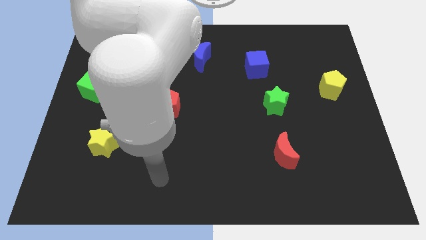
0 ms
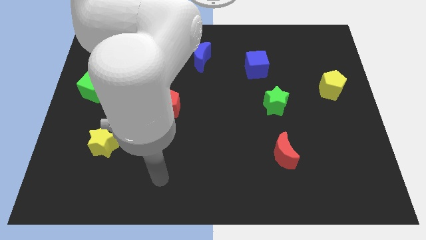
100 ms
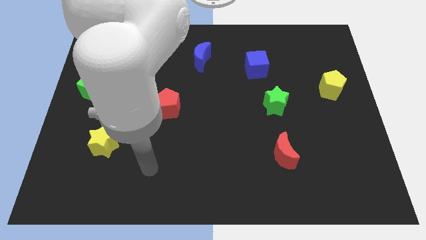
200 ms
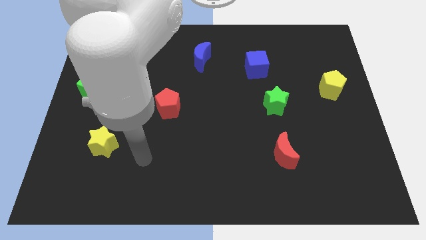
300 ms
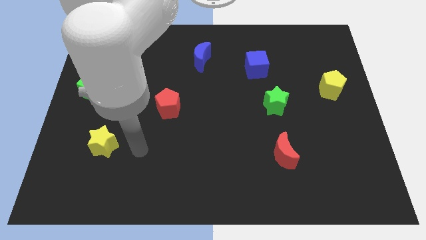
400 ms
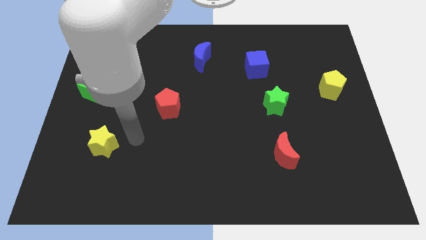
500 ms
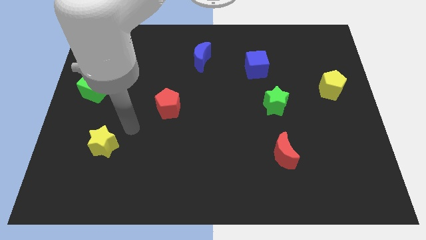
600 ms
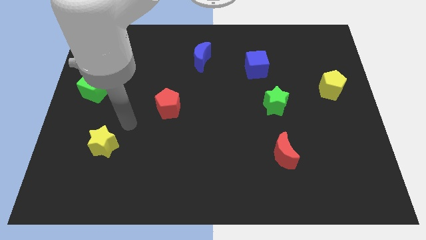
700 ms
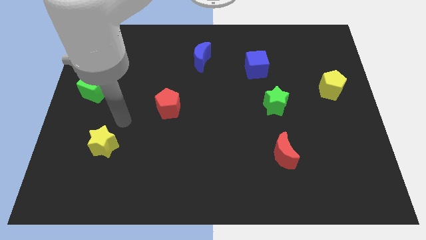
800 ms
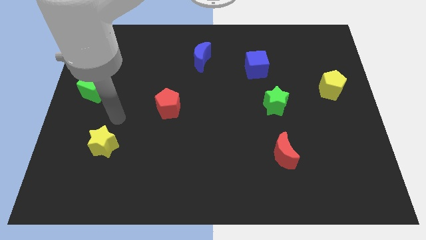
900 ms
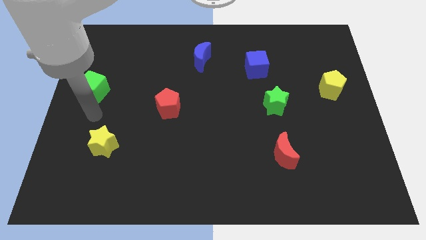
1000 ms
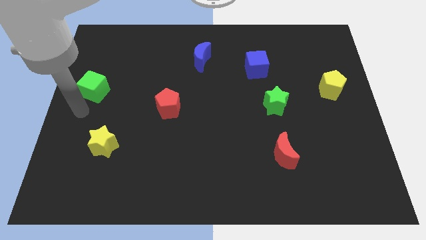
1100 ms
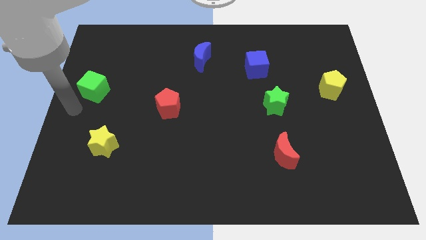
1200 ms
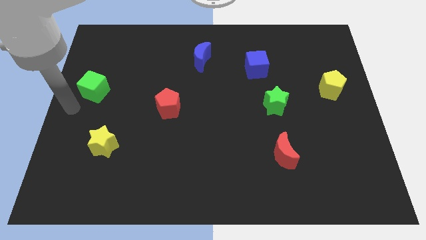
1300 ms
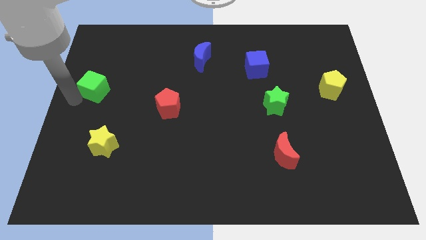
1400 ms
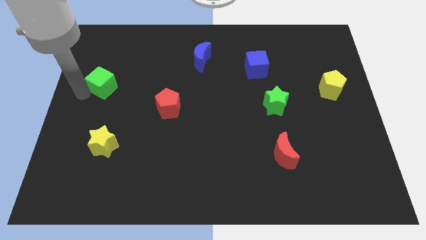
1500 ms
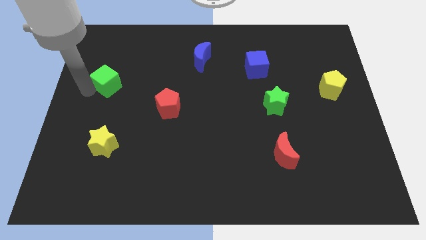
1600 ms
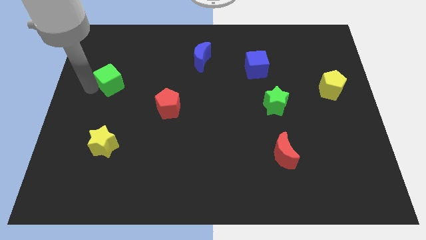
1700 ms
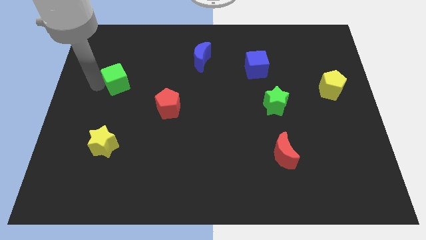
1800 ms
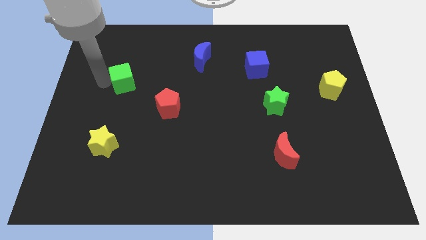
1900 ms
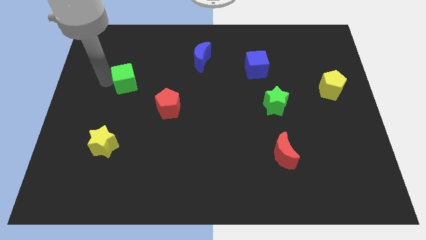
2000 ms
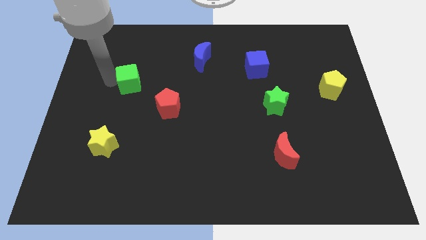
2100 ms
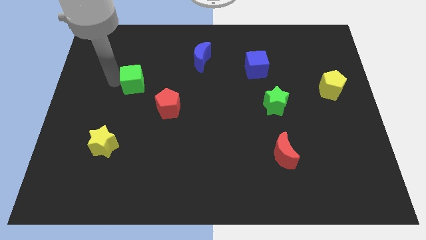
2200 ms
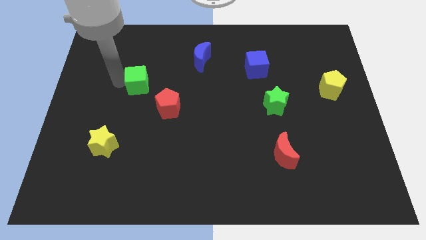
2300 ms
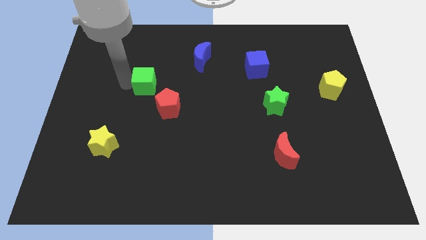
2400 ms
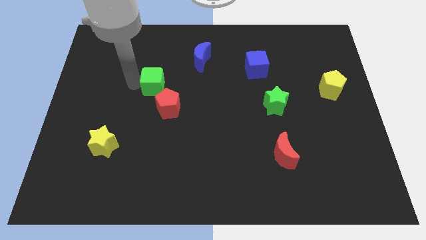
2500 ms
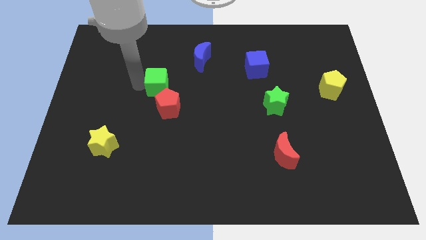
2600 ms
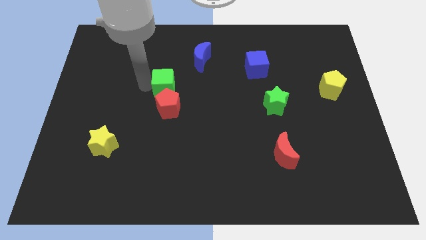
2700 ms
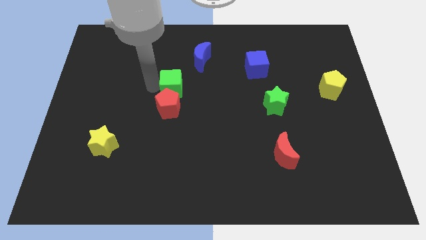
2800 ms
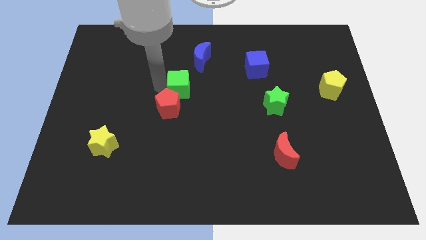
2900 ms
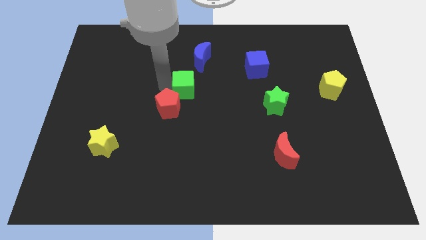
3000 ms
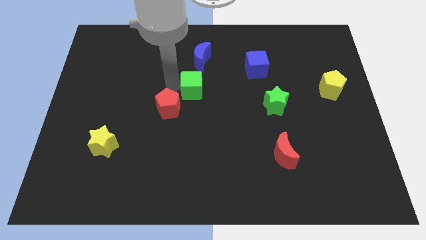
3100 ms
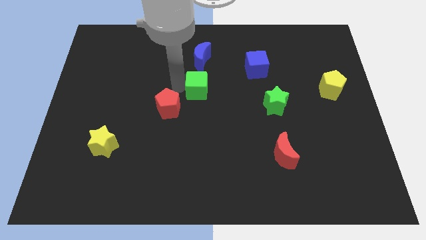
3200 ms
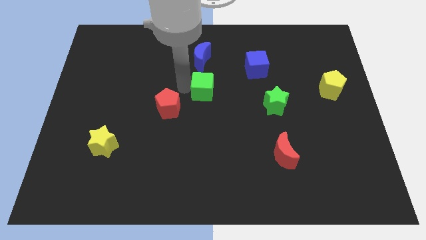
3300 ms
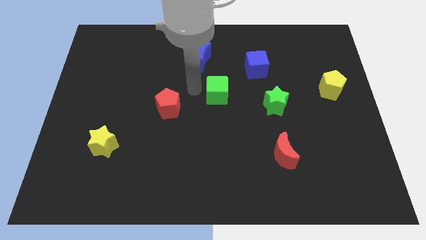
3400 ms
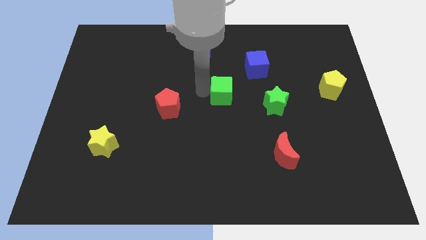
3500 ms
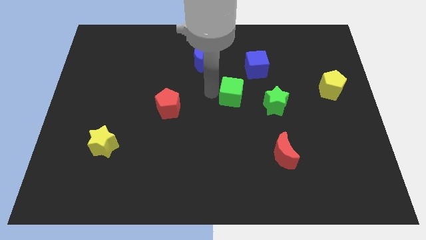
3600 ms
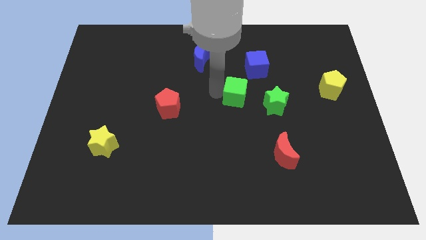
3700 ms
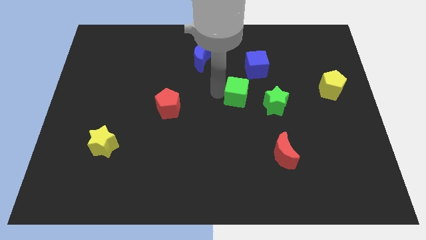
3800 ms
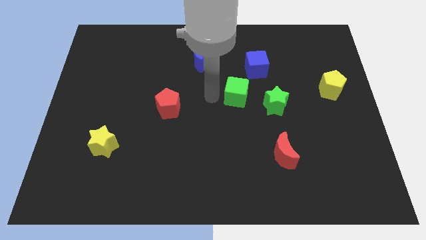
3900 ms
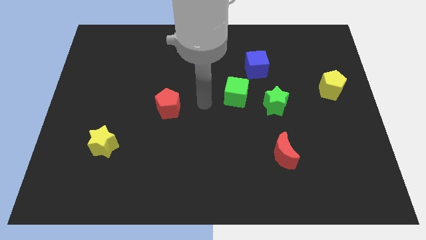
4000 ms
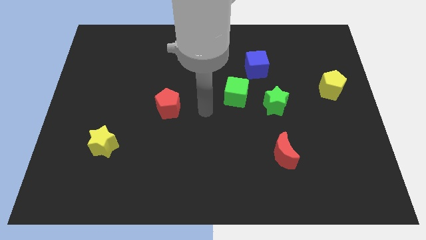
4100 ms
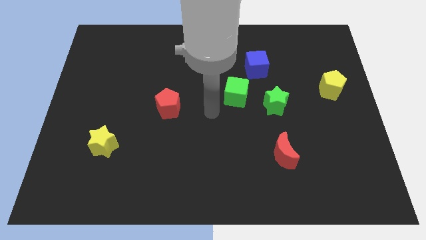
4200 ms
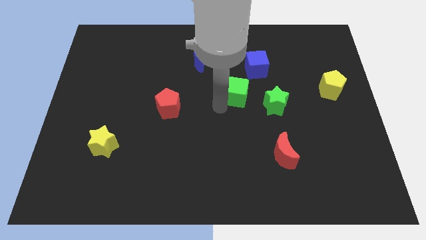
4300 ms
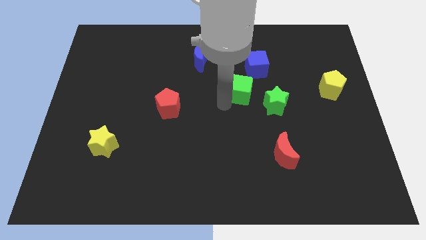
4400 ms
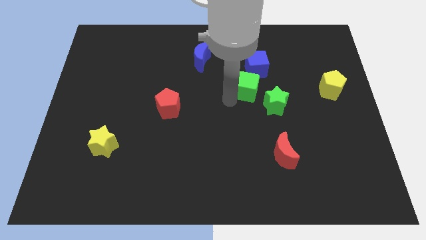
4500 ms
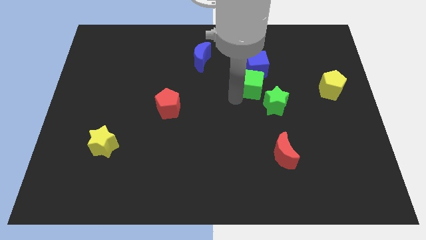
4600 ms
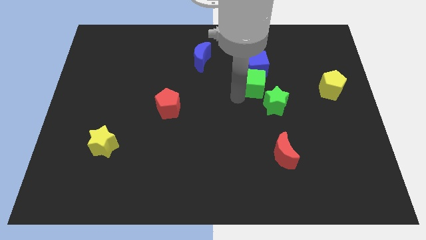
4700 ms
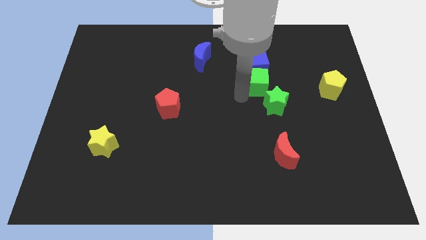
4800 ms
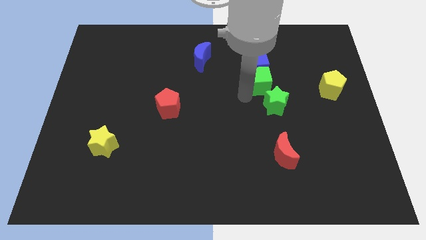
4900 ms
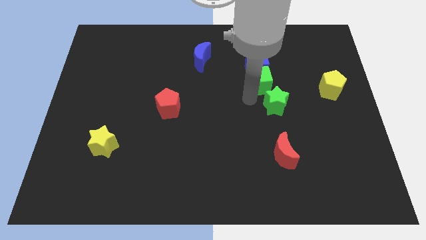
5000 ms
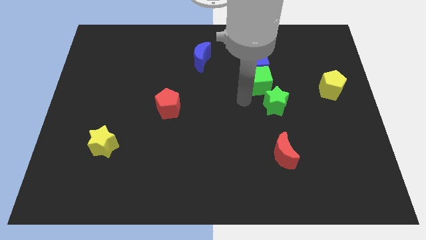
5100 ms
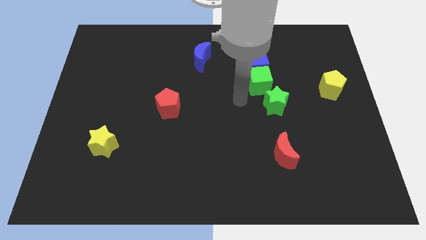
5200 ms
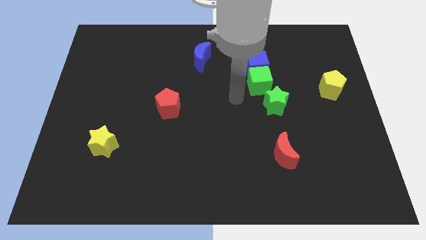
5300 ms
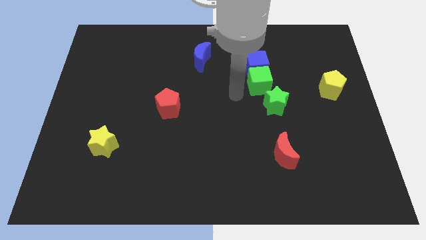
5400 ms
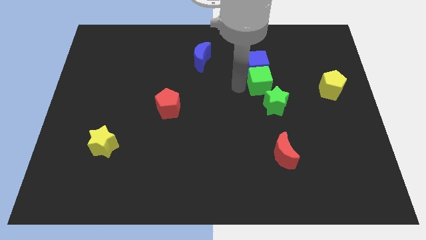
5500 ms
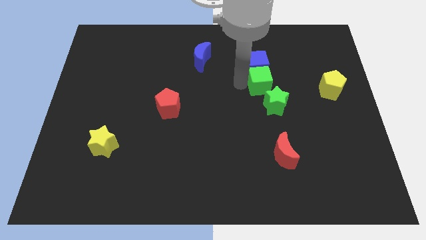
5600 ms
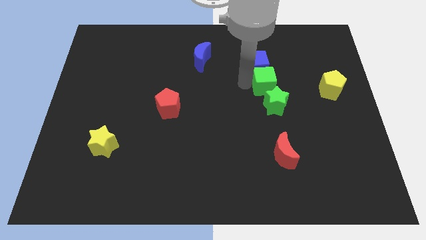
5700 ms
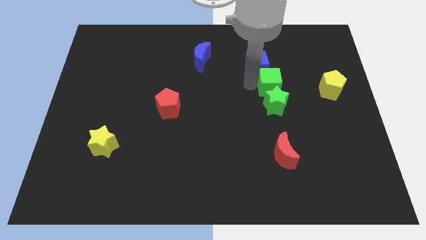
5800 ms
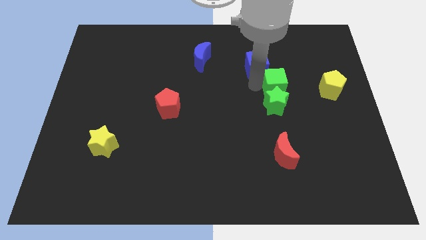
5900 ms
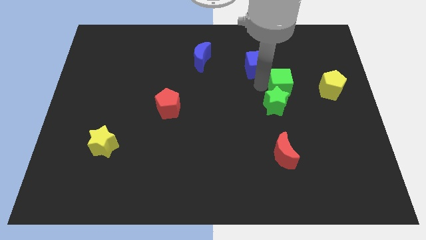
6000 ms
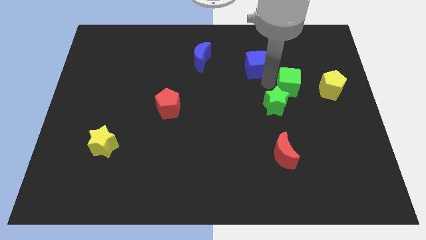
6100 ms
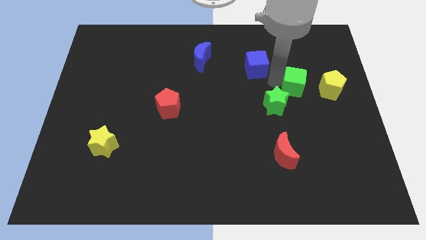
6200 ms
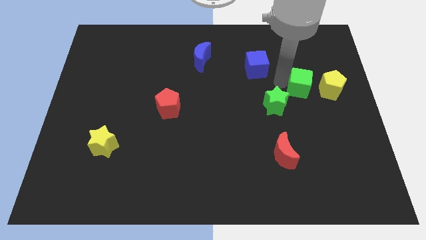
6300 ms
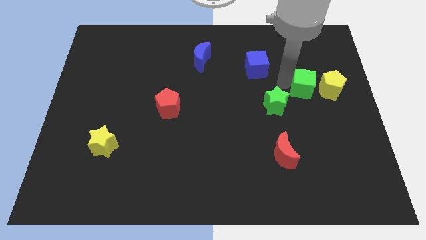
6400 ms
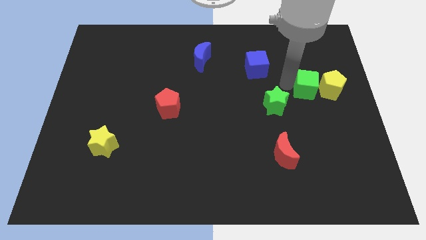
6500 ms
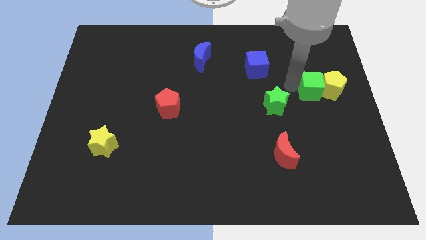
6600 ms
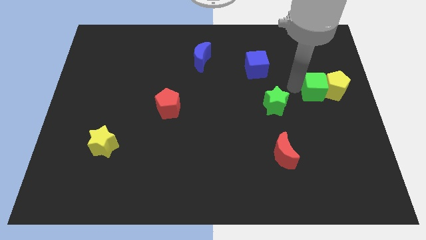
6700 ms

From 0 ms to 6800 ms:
put the green cube close to the yellow pentagon

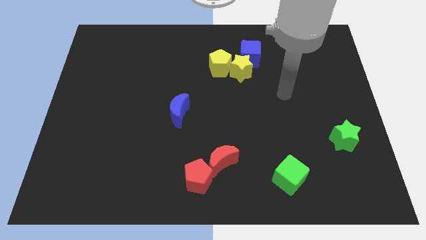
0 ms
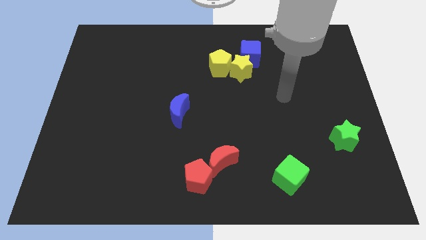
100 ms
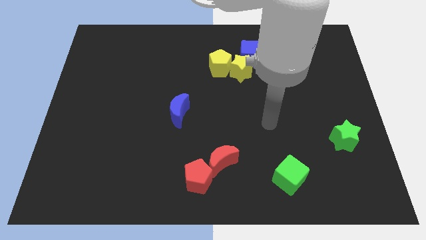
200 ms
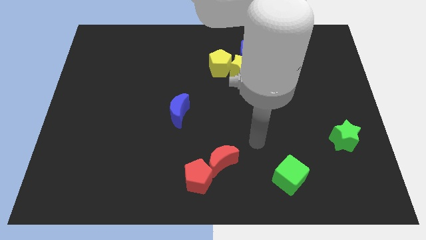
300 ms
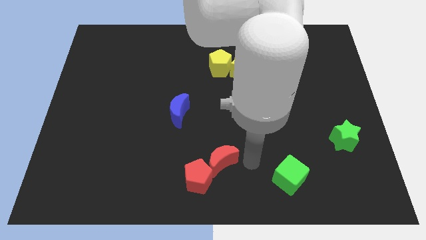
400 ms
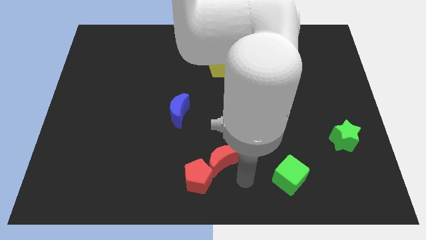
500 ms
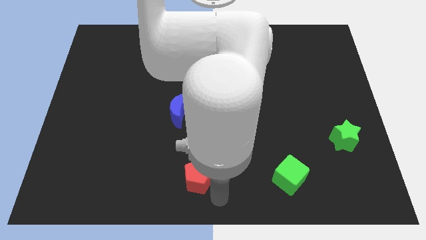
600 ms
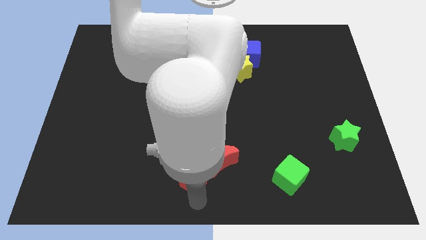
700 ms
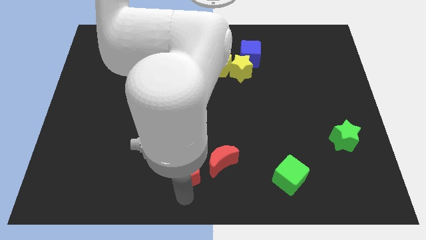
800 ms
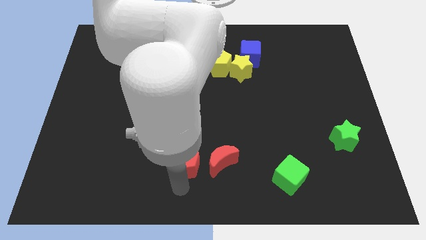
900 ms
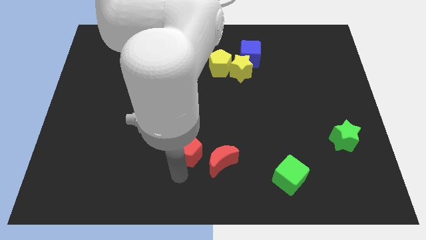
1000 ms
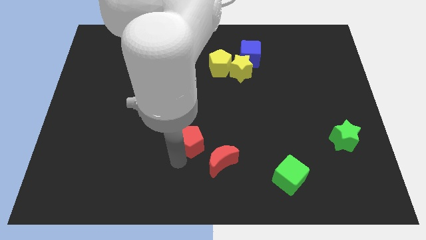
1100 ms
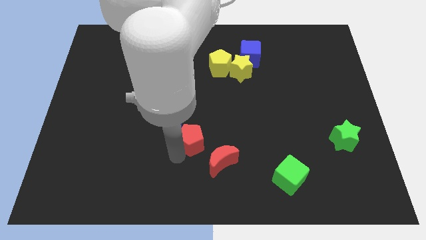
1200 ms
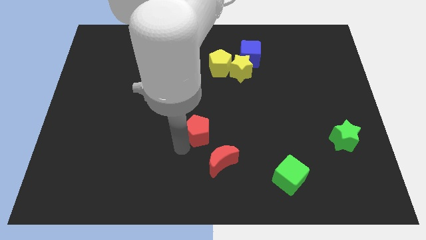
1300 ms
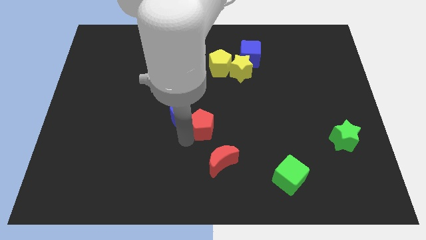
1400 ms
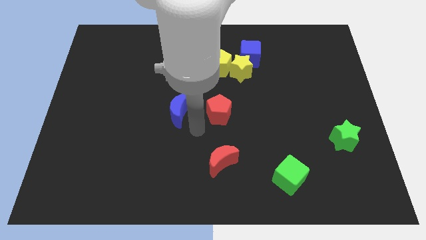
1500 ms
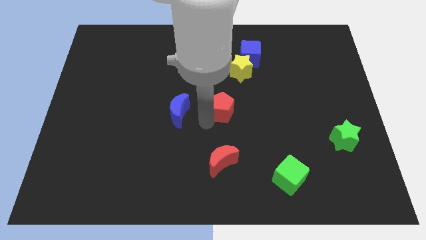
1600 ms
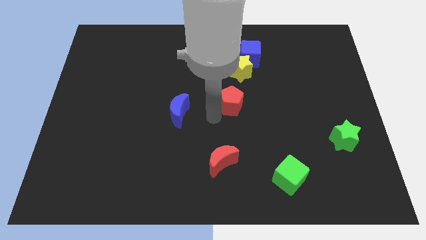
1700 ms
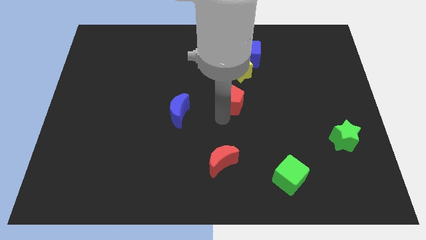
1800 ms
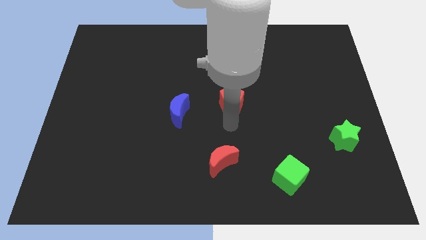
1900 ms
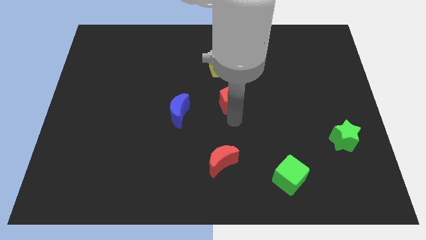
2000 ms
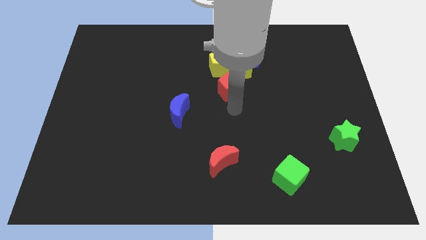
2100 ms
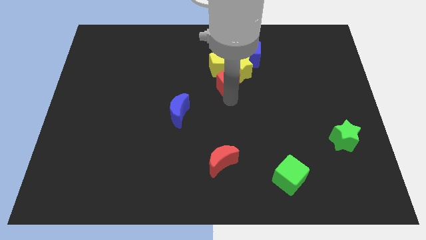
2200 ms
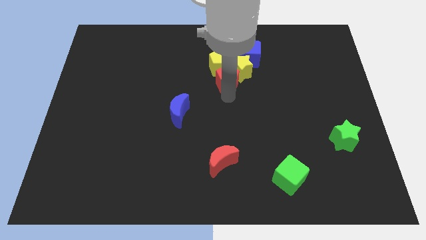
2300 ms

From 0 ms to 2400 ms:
move the red pentagon to the yellow star
